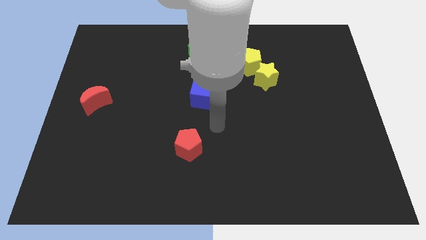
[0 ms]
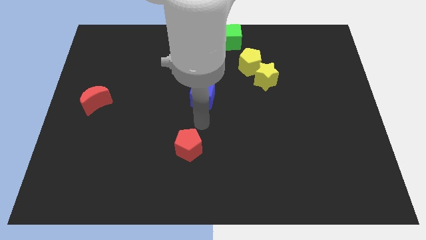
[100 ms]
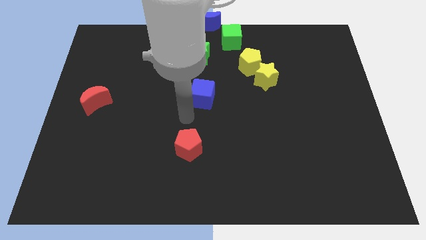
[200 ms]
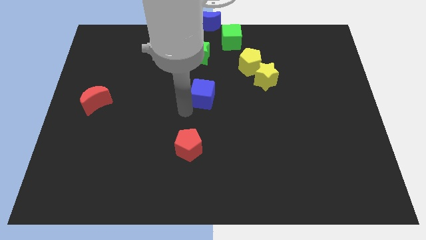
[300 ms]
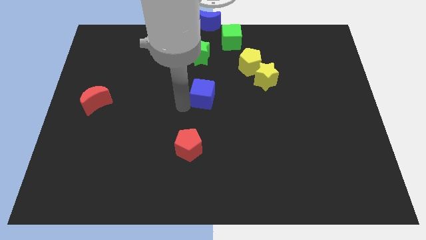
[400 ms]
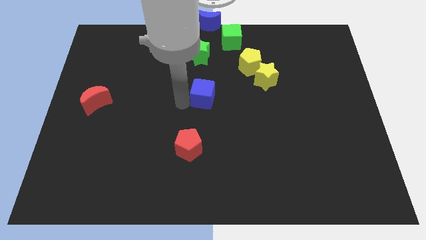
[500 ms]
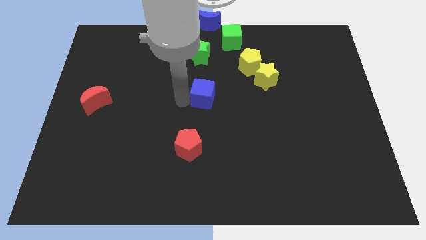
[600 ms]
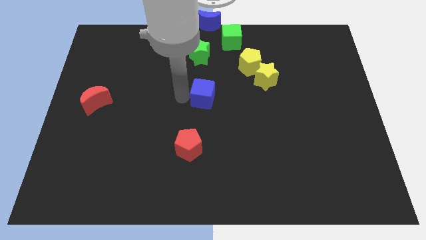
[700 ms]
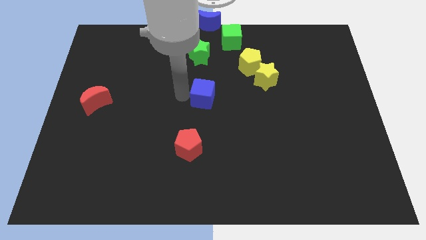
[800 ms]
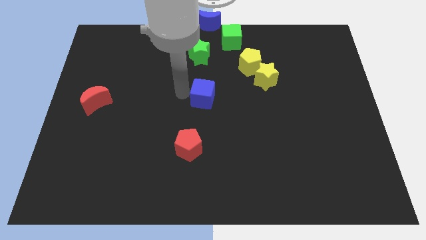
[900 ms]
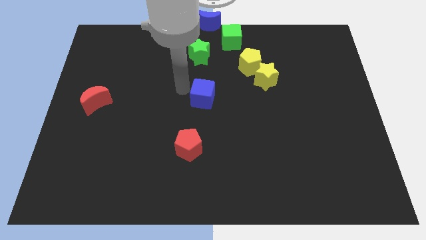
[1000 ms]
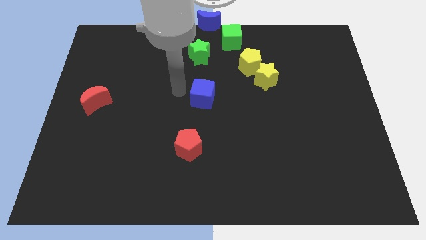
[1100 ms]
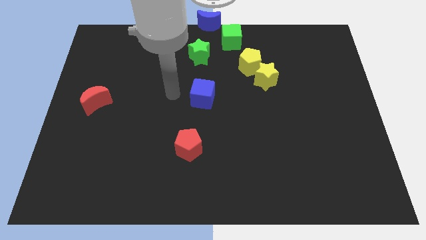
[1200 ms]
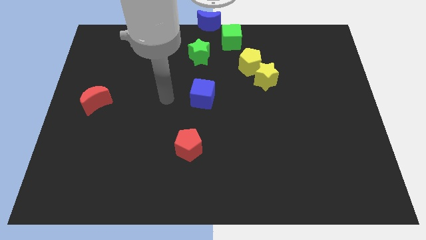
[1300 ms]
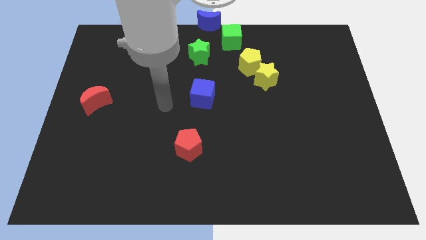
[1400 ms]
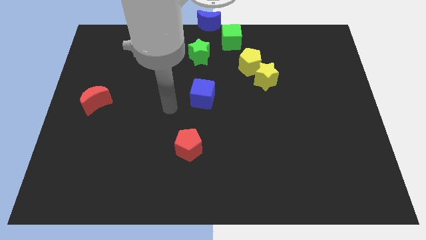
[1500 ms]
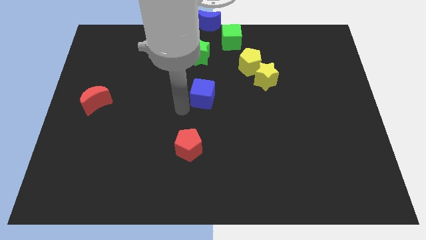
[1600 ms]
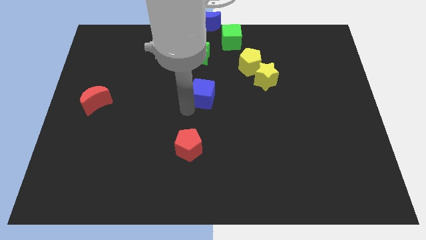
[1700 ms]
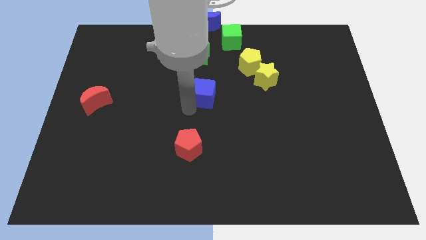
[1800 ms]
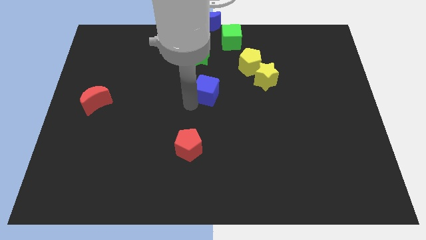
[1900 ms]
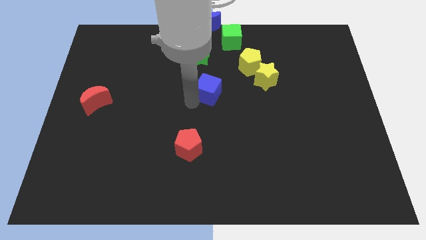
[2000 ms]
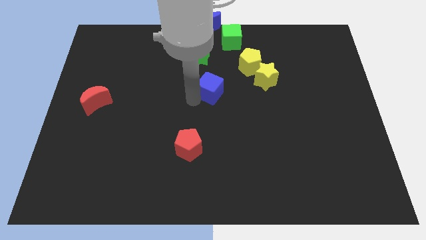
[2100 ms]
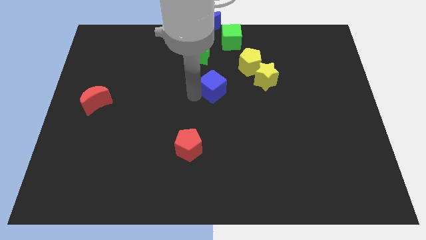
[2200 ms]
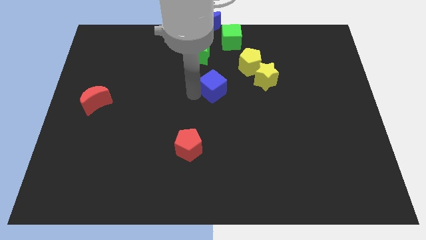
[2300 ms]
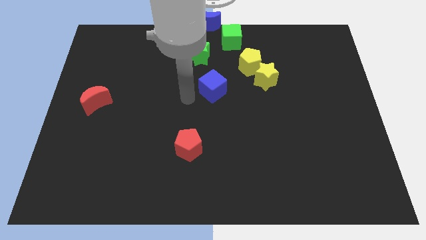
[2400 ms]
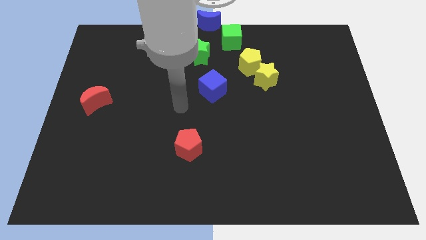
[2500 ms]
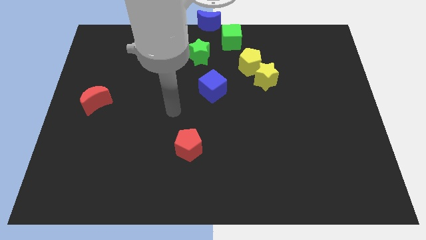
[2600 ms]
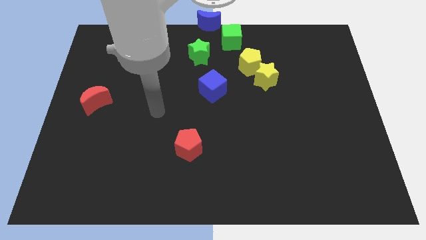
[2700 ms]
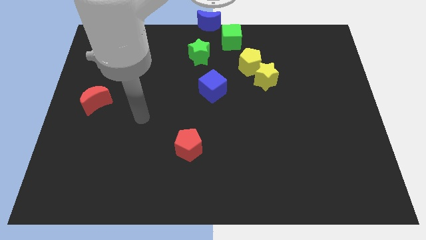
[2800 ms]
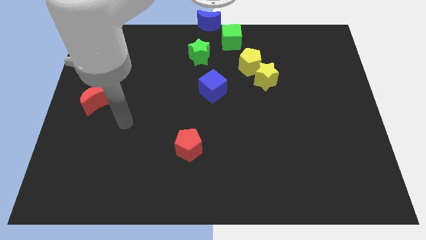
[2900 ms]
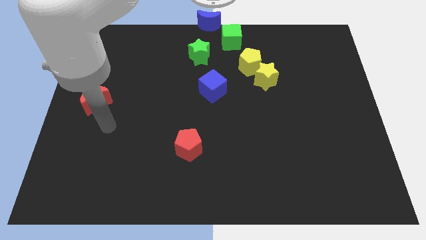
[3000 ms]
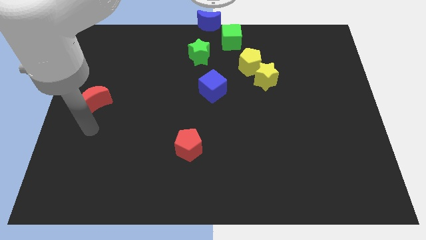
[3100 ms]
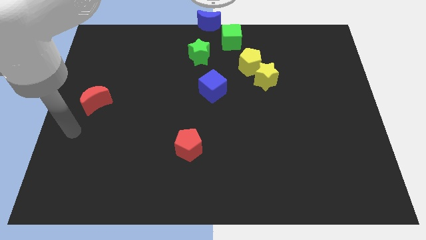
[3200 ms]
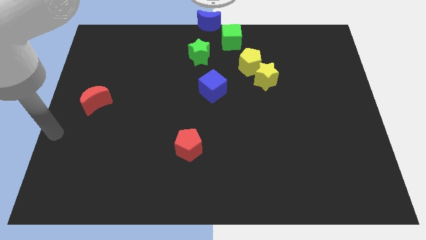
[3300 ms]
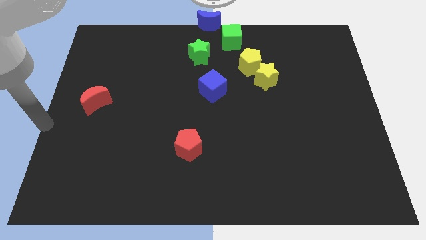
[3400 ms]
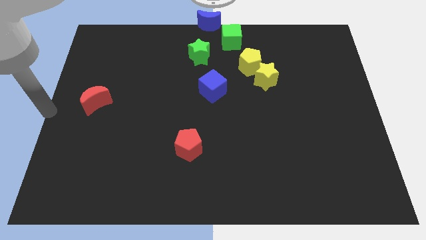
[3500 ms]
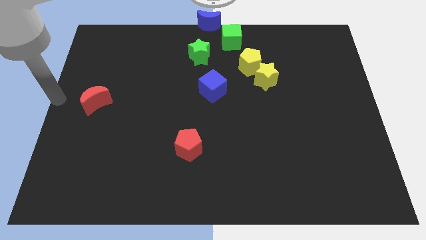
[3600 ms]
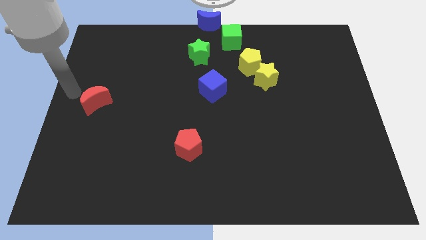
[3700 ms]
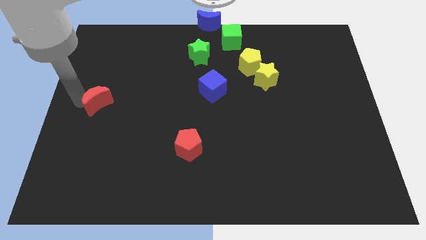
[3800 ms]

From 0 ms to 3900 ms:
move the blue cube slightly towards the right

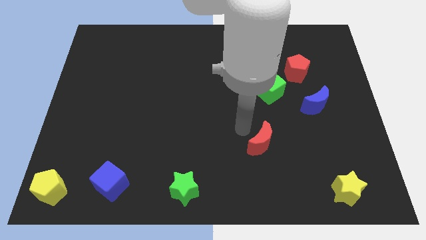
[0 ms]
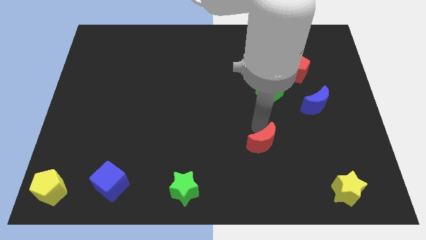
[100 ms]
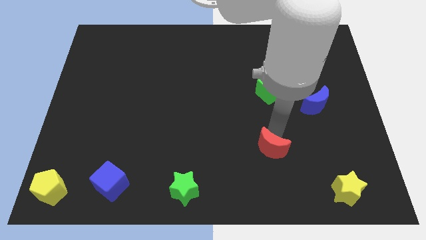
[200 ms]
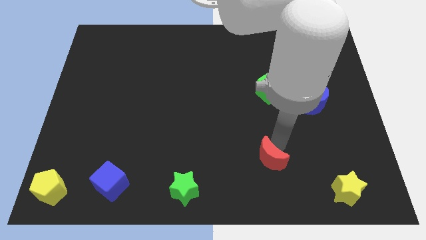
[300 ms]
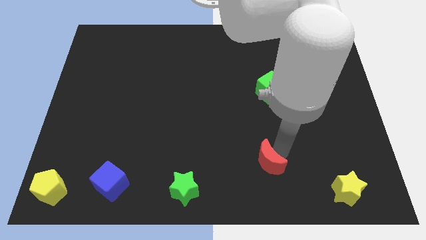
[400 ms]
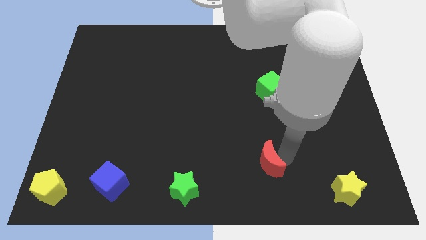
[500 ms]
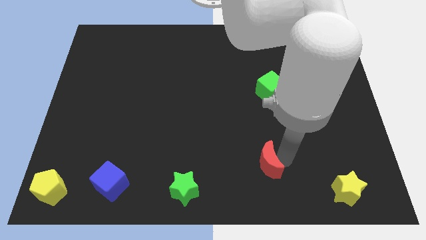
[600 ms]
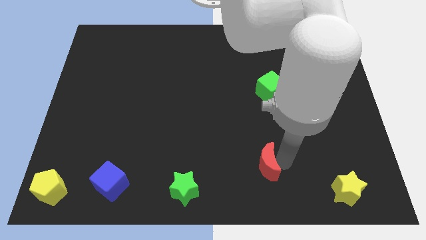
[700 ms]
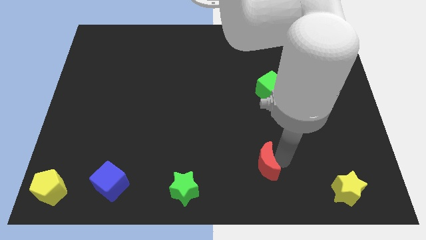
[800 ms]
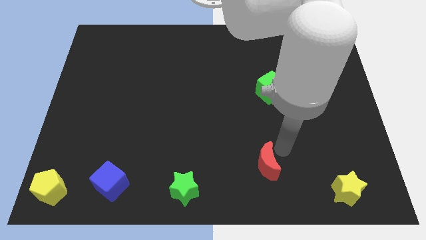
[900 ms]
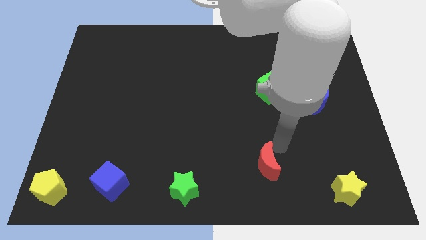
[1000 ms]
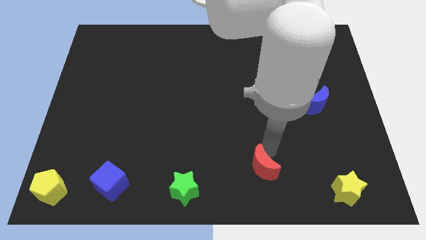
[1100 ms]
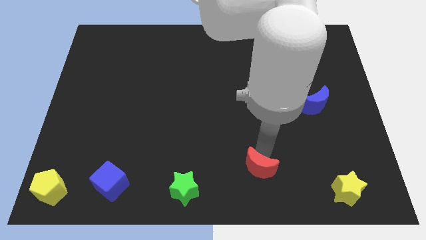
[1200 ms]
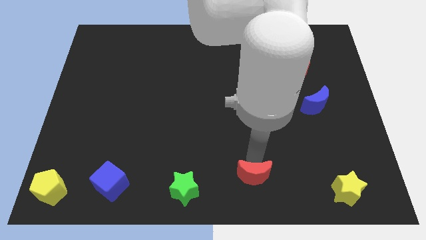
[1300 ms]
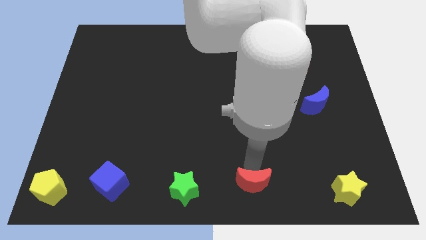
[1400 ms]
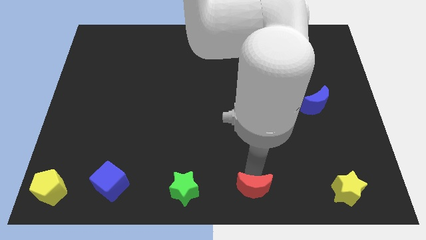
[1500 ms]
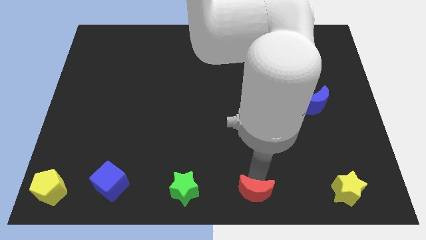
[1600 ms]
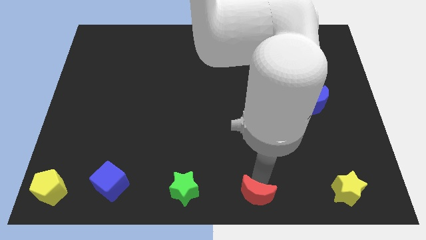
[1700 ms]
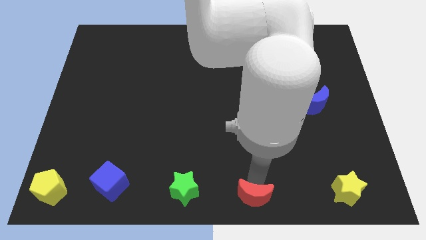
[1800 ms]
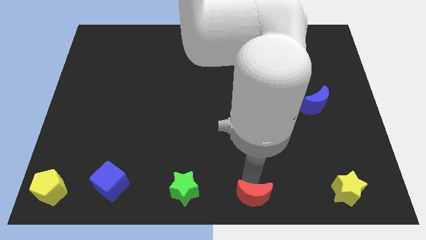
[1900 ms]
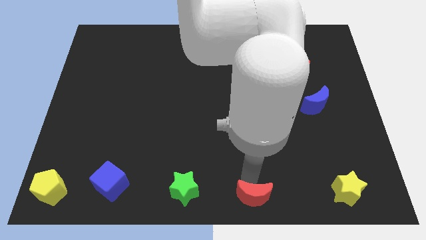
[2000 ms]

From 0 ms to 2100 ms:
put red moon to the right of green star

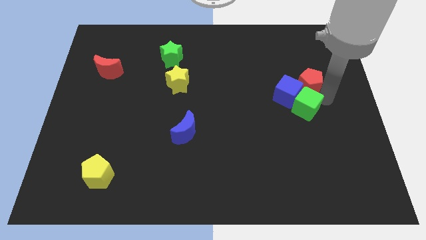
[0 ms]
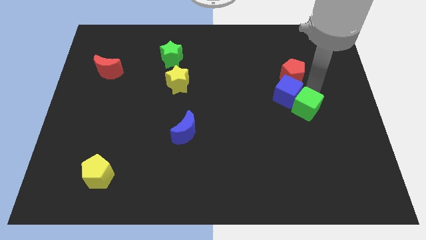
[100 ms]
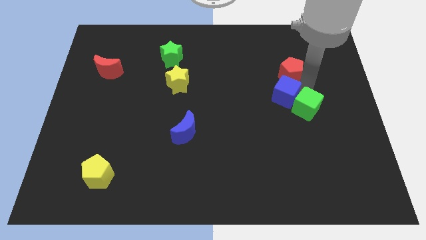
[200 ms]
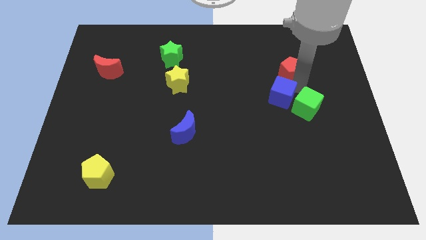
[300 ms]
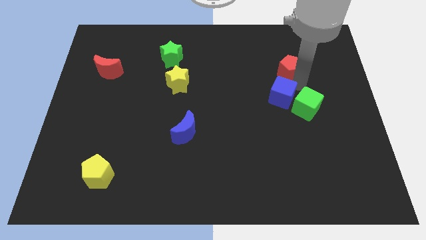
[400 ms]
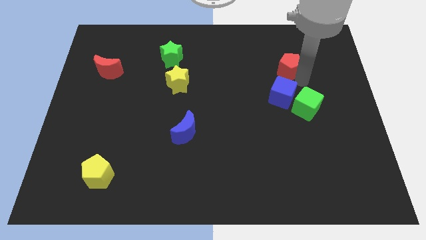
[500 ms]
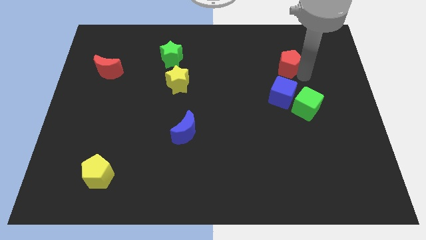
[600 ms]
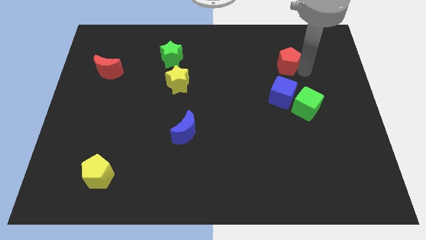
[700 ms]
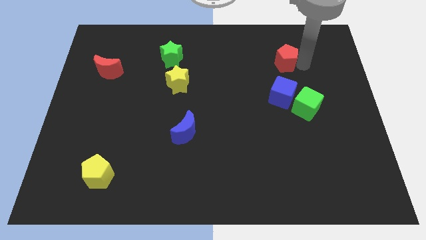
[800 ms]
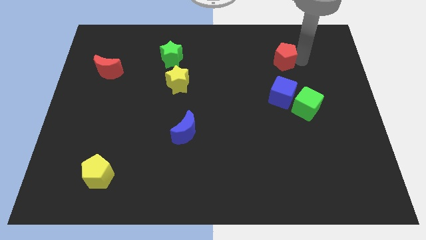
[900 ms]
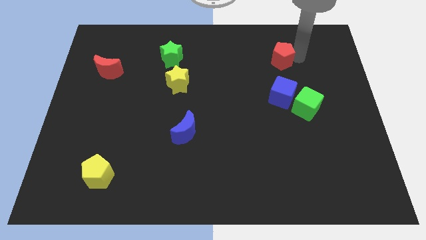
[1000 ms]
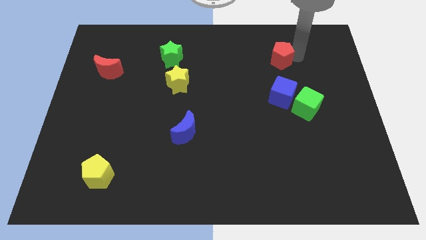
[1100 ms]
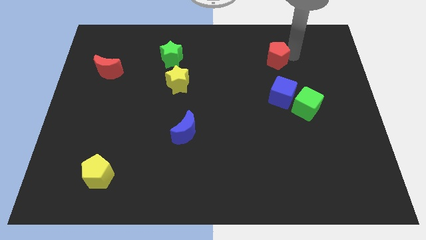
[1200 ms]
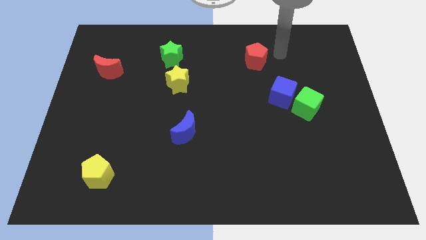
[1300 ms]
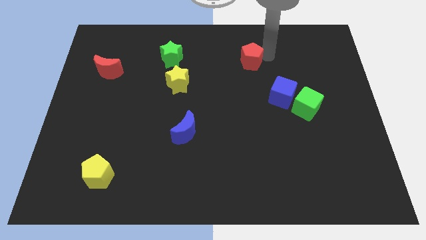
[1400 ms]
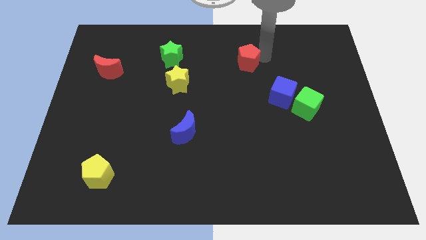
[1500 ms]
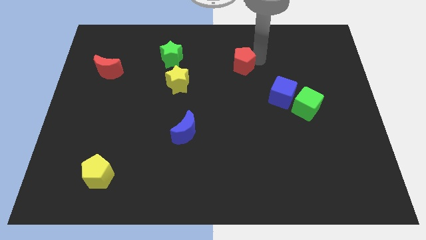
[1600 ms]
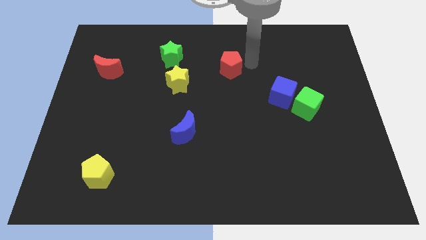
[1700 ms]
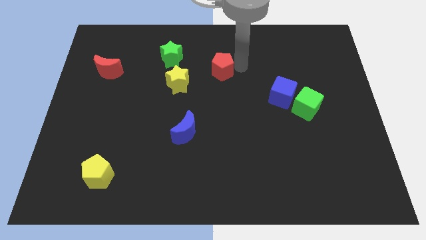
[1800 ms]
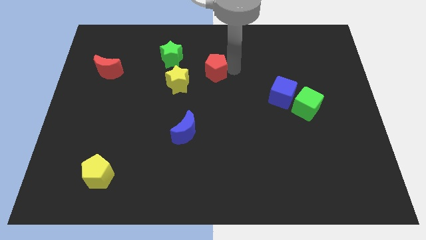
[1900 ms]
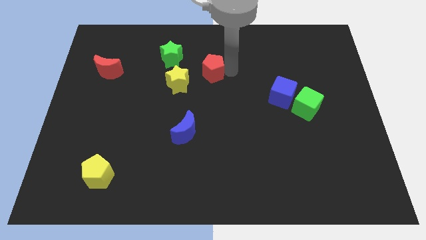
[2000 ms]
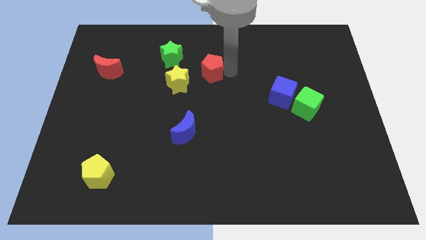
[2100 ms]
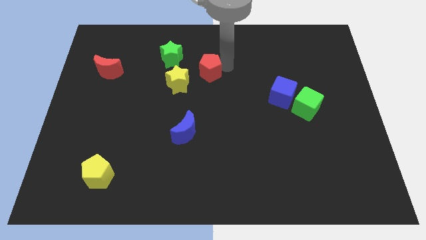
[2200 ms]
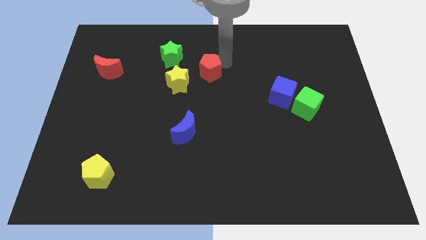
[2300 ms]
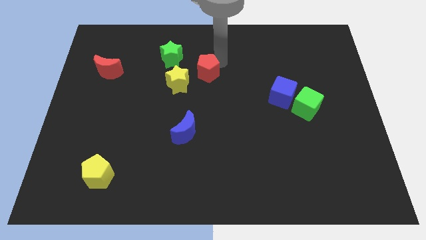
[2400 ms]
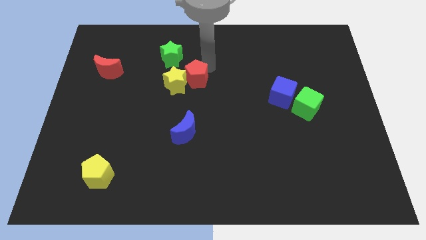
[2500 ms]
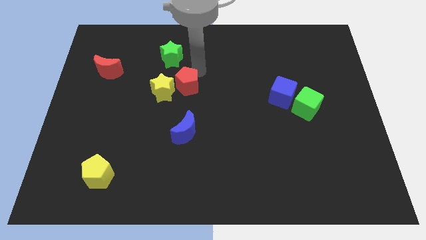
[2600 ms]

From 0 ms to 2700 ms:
place the red pentagon into yellow star to the right

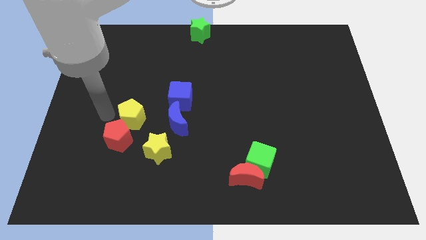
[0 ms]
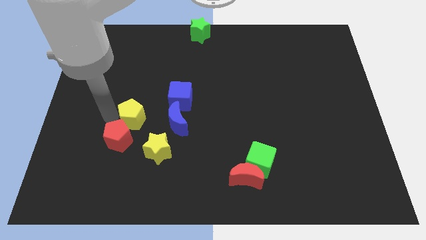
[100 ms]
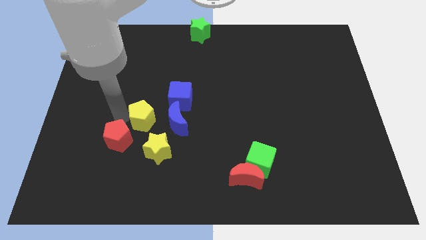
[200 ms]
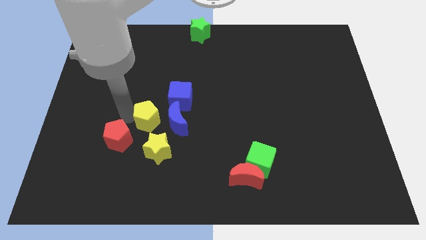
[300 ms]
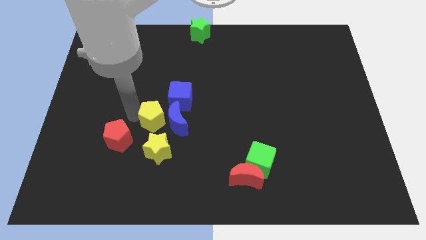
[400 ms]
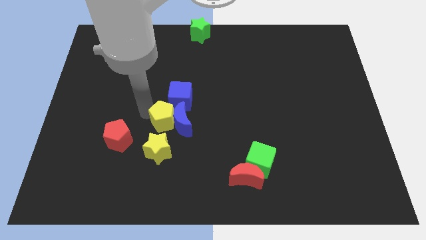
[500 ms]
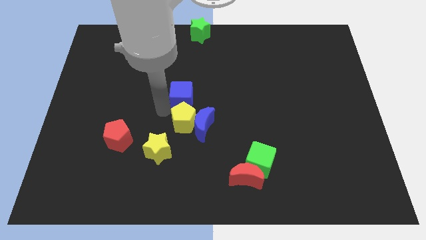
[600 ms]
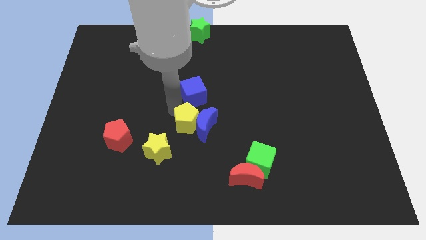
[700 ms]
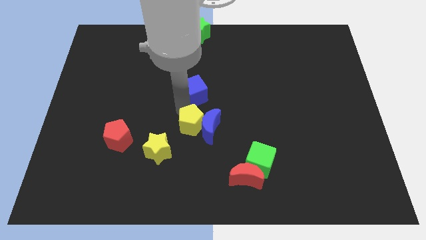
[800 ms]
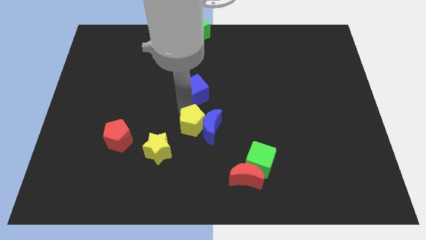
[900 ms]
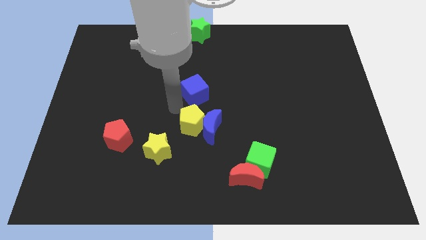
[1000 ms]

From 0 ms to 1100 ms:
place the yellow pentagon to the left of the blue crescent
